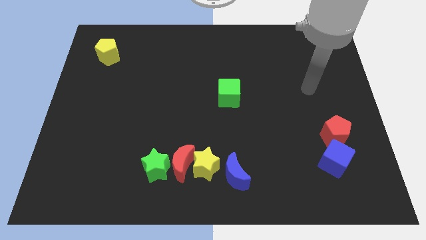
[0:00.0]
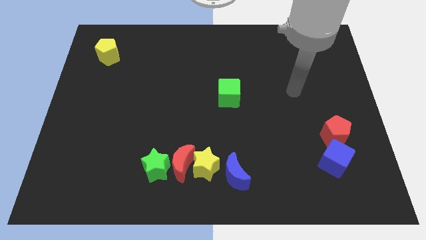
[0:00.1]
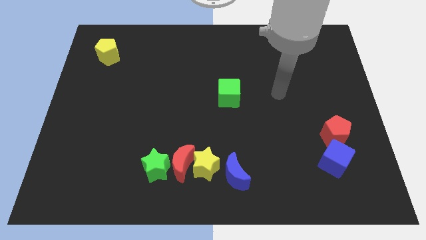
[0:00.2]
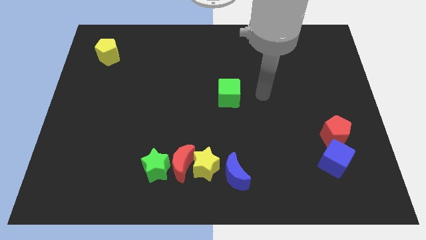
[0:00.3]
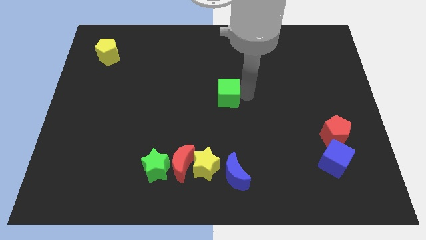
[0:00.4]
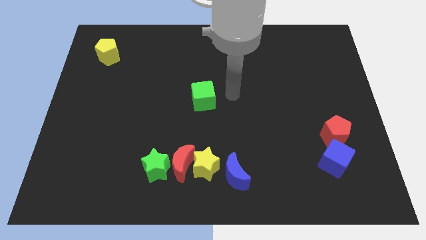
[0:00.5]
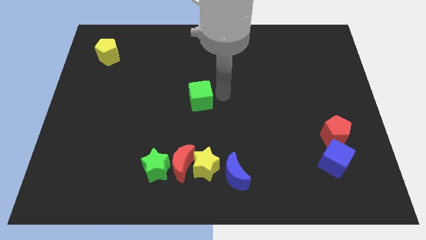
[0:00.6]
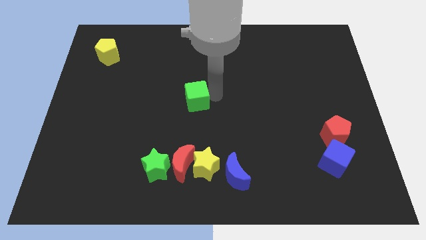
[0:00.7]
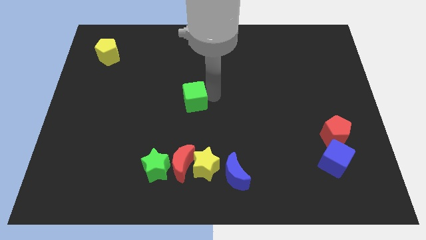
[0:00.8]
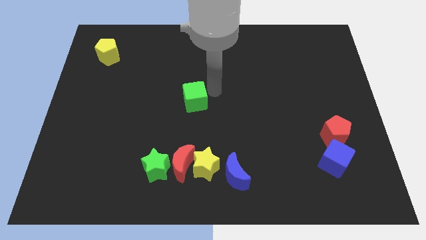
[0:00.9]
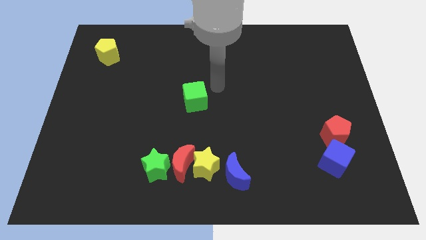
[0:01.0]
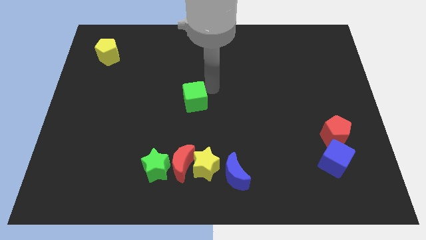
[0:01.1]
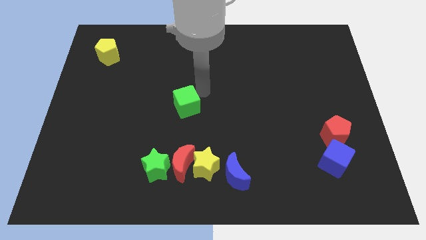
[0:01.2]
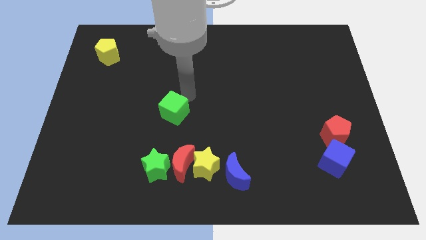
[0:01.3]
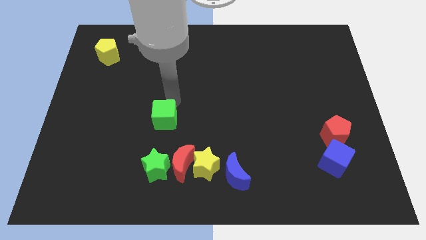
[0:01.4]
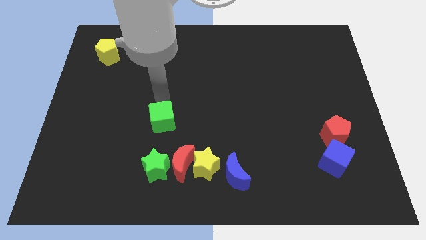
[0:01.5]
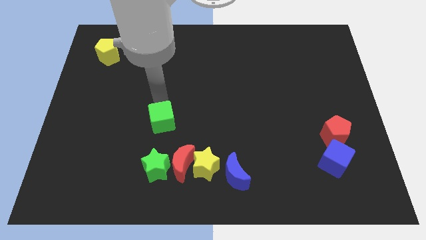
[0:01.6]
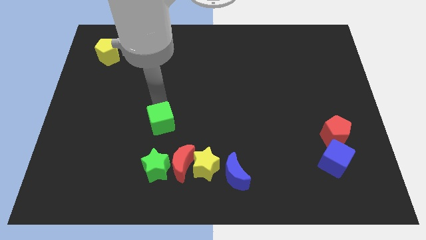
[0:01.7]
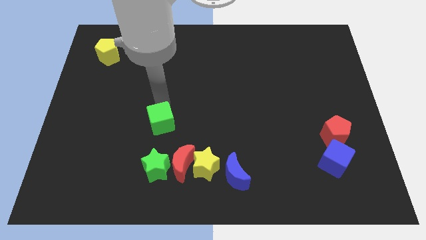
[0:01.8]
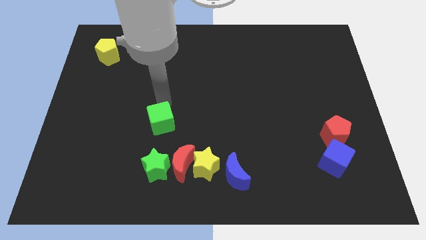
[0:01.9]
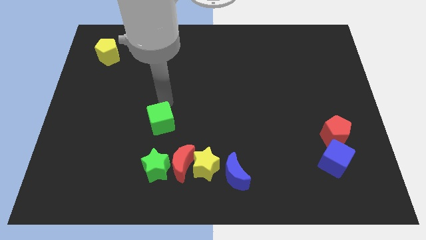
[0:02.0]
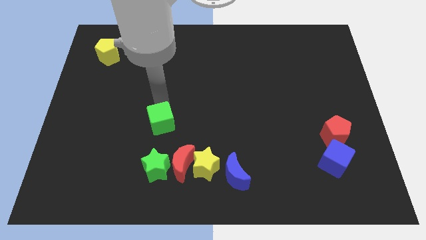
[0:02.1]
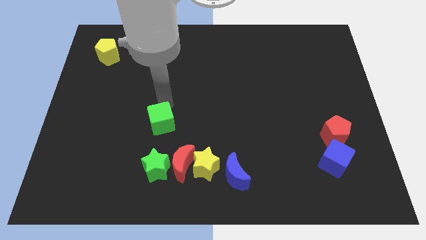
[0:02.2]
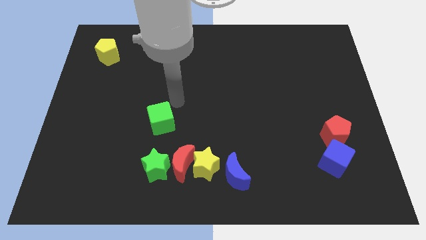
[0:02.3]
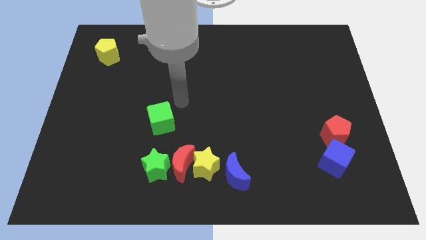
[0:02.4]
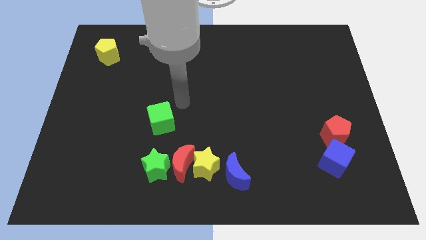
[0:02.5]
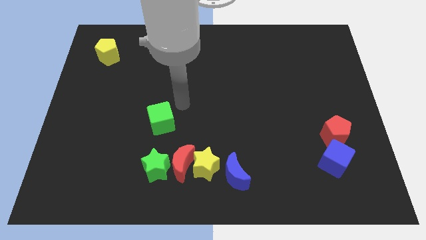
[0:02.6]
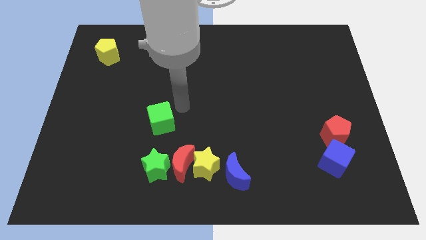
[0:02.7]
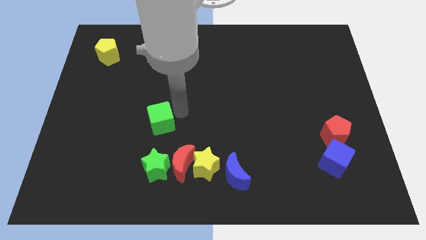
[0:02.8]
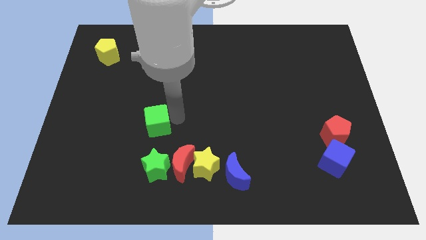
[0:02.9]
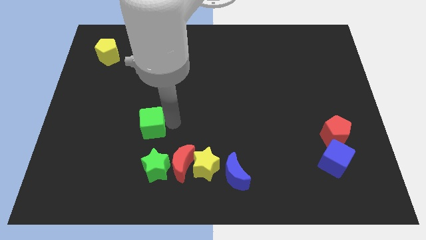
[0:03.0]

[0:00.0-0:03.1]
push the green cube to the top of the green star

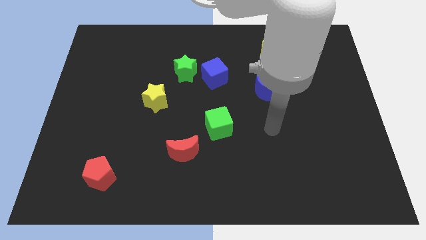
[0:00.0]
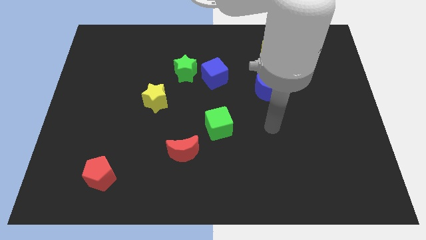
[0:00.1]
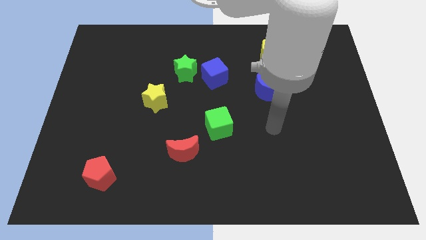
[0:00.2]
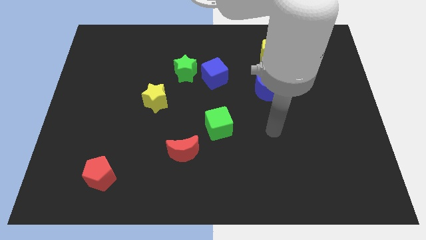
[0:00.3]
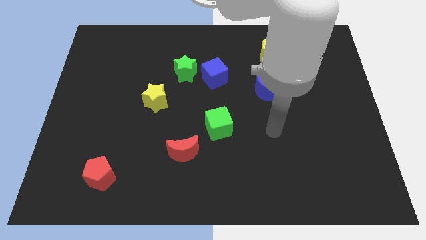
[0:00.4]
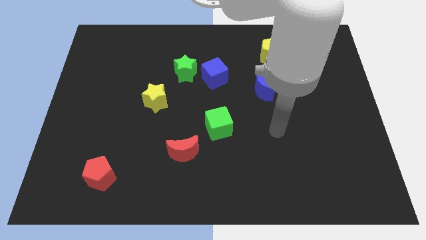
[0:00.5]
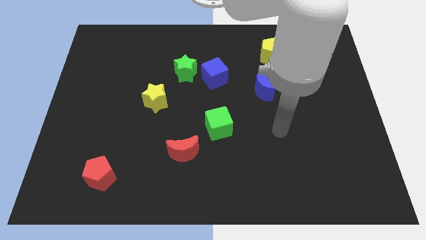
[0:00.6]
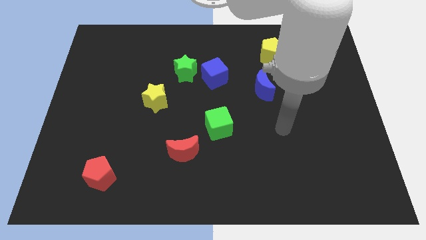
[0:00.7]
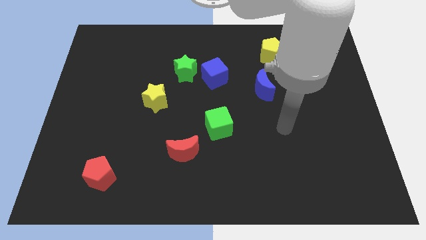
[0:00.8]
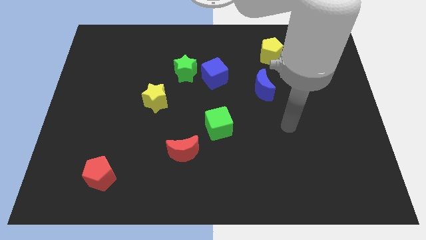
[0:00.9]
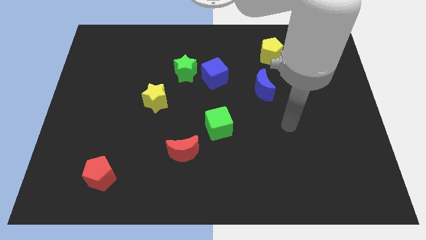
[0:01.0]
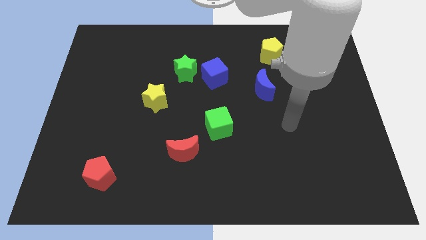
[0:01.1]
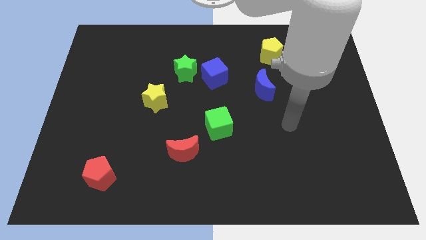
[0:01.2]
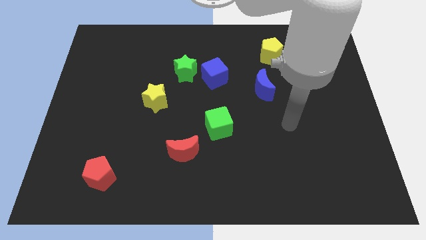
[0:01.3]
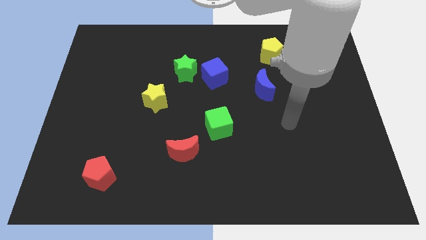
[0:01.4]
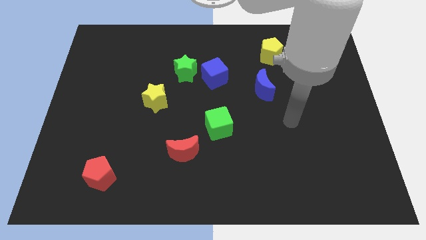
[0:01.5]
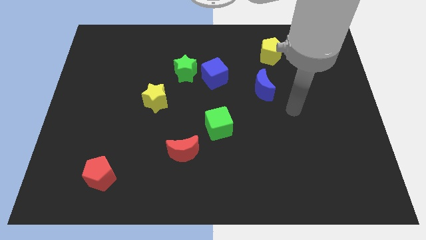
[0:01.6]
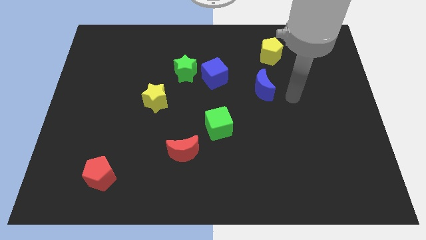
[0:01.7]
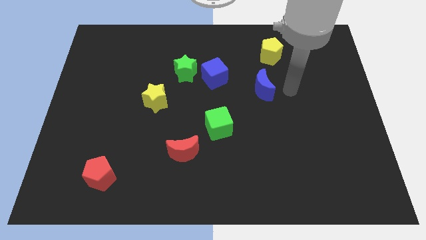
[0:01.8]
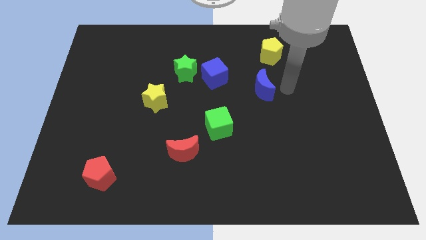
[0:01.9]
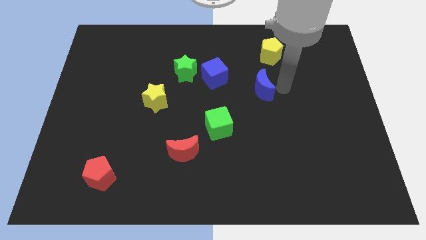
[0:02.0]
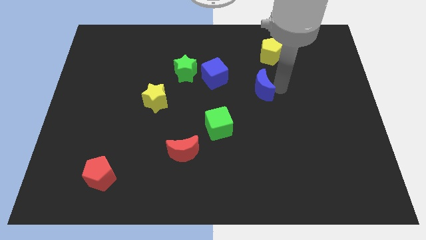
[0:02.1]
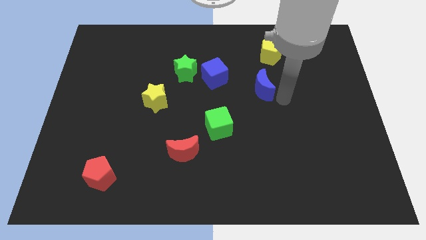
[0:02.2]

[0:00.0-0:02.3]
place arm on the bottom of blue moon

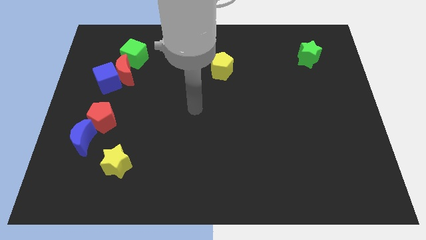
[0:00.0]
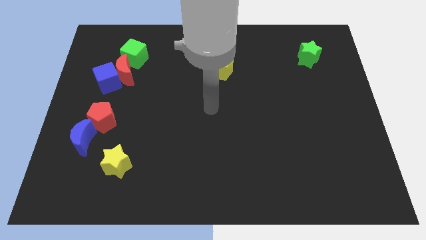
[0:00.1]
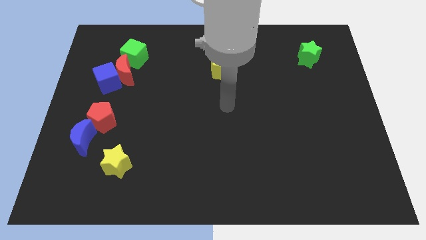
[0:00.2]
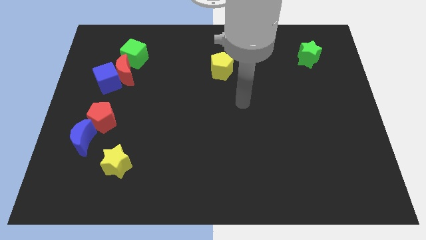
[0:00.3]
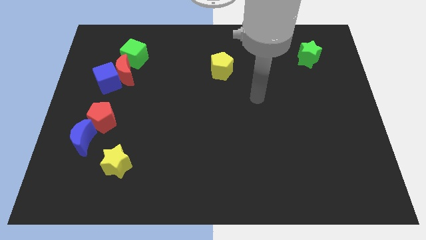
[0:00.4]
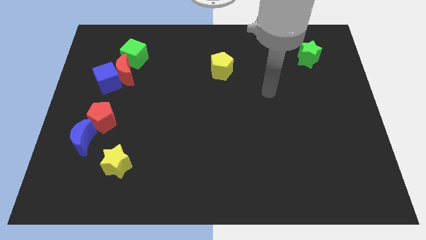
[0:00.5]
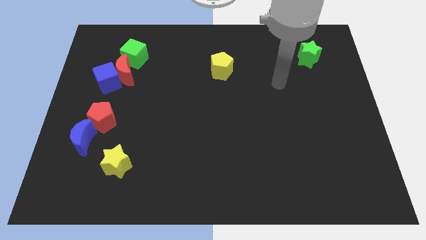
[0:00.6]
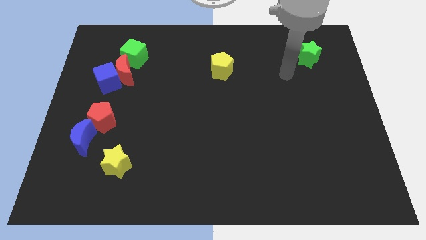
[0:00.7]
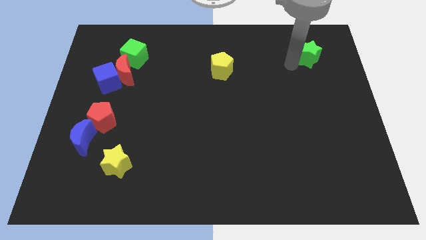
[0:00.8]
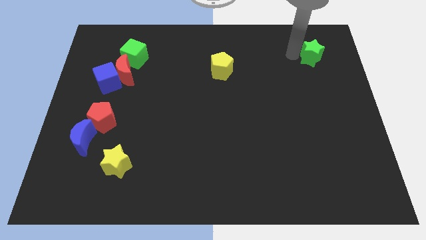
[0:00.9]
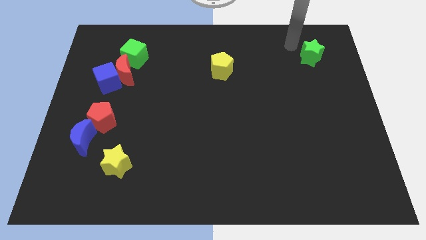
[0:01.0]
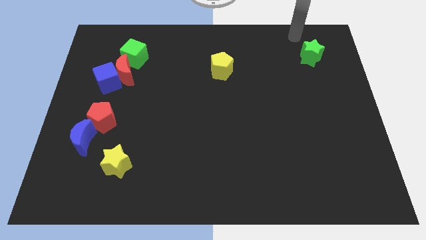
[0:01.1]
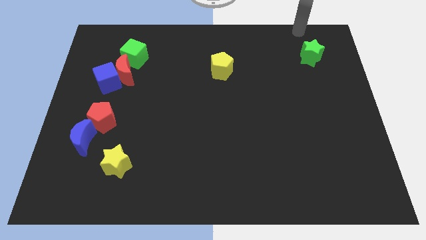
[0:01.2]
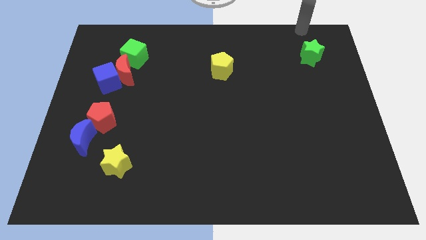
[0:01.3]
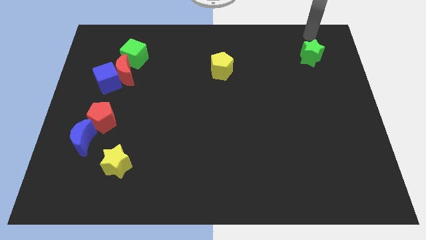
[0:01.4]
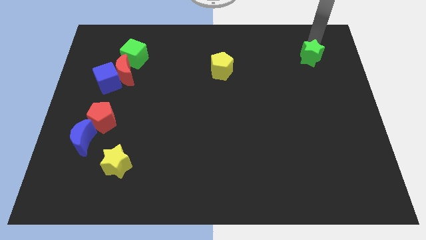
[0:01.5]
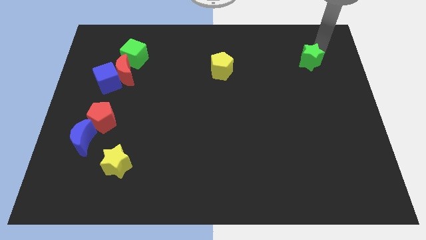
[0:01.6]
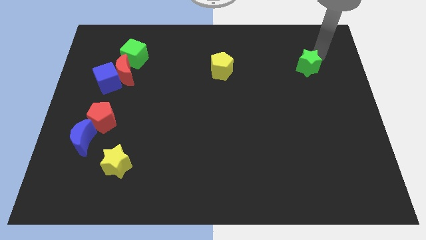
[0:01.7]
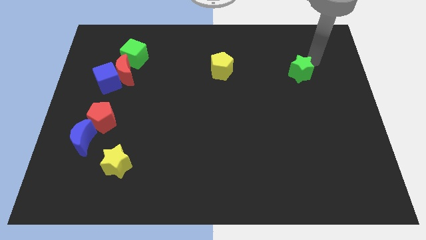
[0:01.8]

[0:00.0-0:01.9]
push the green star to the right of yellow pentagon

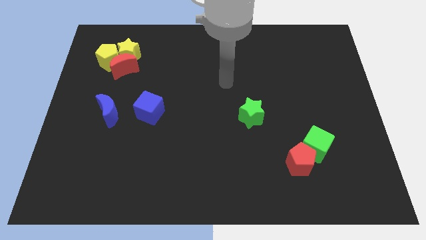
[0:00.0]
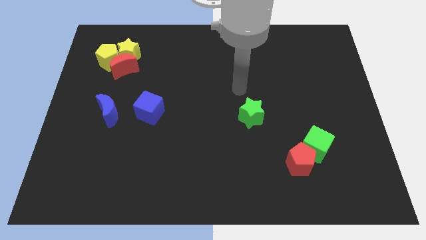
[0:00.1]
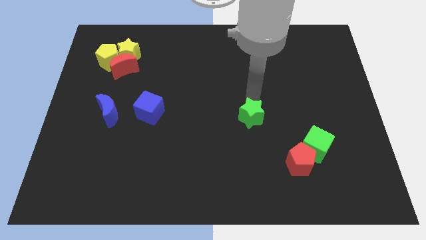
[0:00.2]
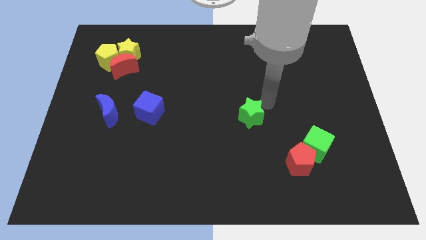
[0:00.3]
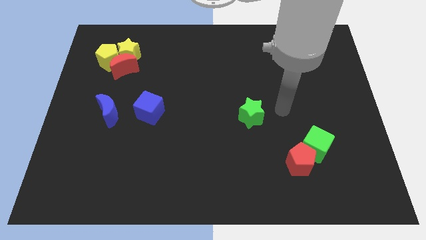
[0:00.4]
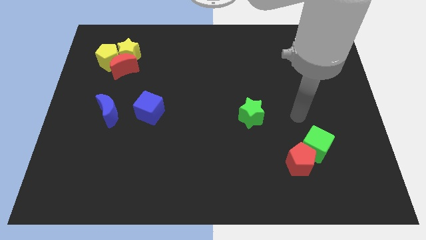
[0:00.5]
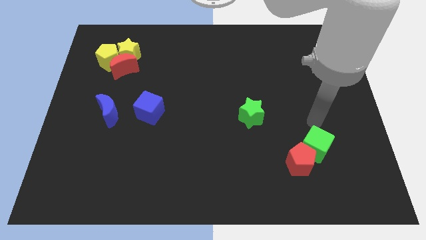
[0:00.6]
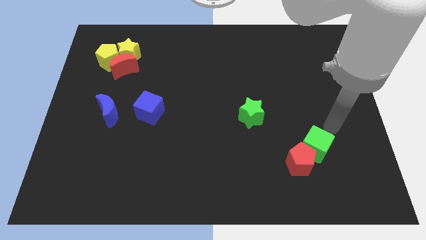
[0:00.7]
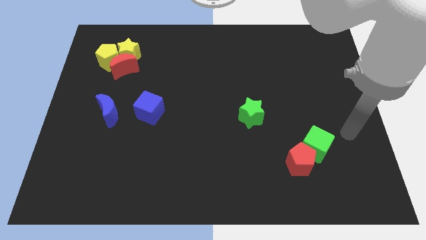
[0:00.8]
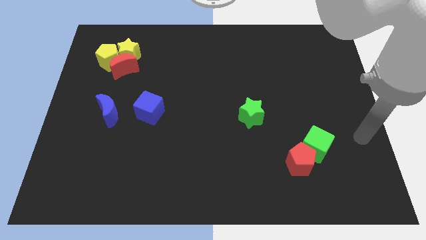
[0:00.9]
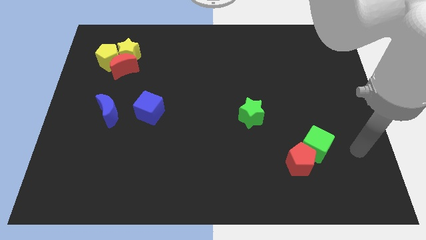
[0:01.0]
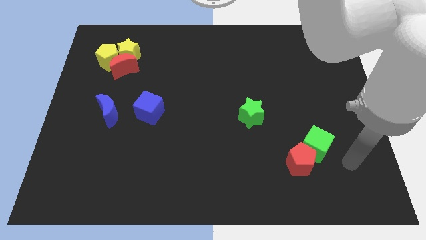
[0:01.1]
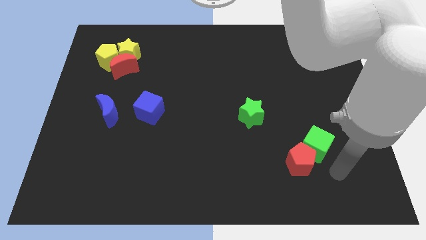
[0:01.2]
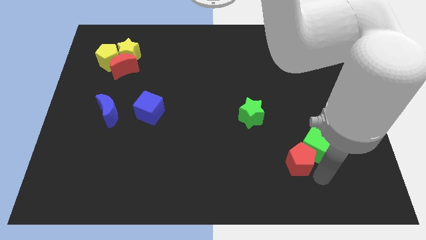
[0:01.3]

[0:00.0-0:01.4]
point your hand below the green cube

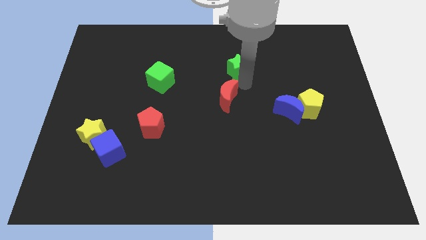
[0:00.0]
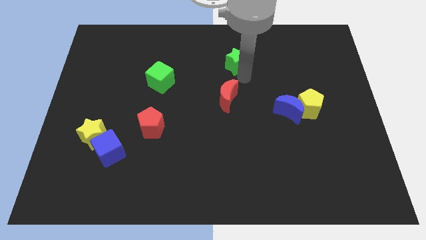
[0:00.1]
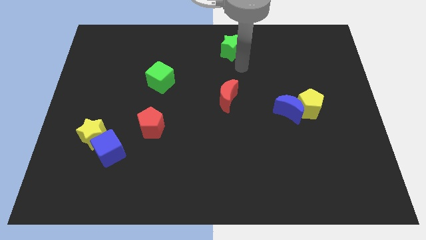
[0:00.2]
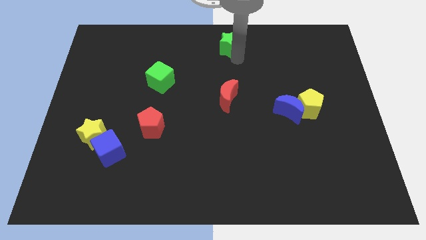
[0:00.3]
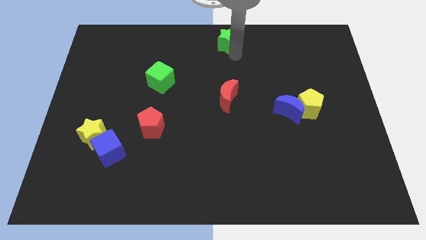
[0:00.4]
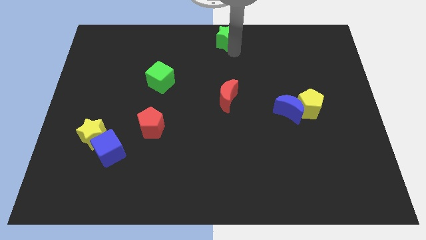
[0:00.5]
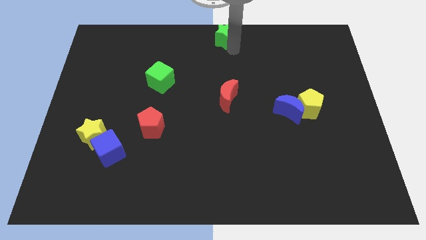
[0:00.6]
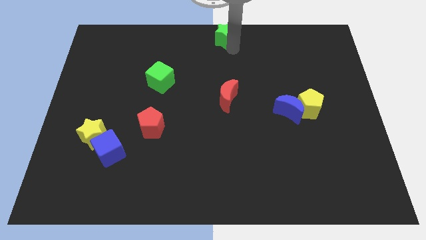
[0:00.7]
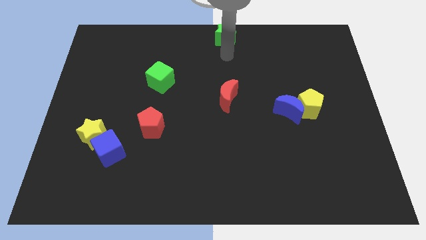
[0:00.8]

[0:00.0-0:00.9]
move green star on center top
